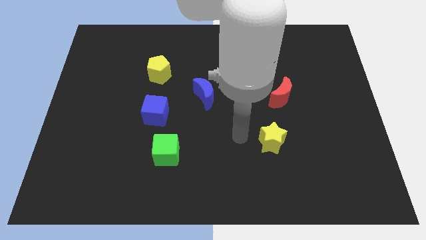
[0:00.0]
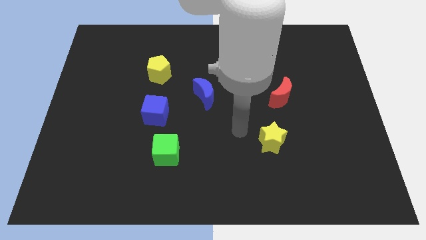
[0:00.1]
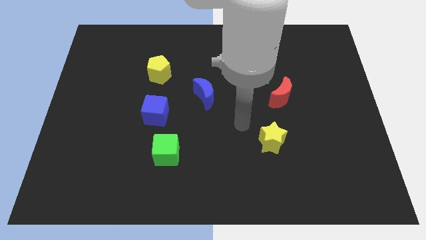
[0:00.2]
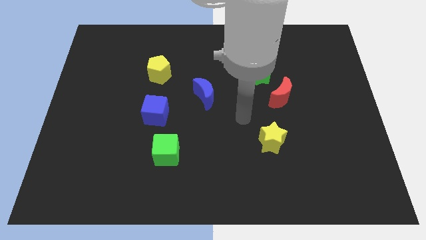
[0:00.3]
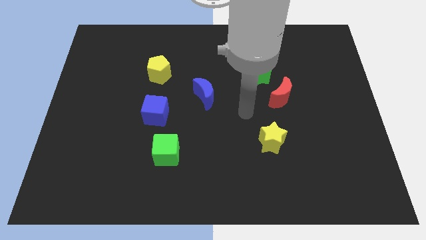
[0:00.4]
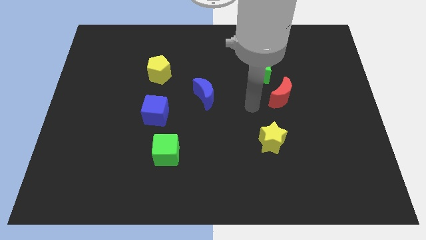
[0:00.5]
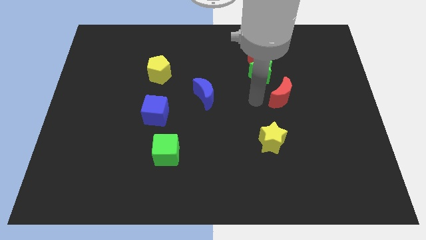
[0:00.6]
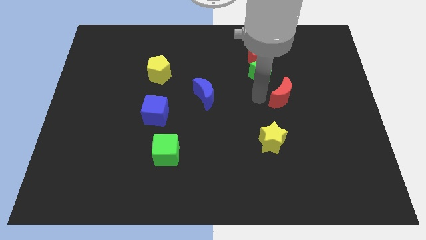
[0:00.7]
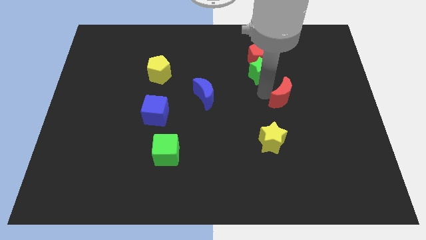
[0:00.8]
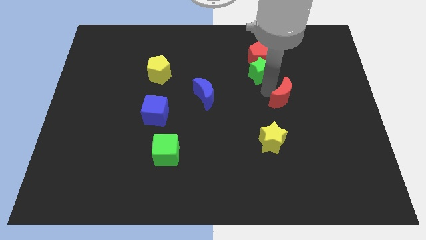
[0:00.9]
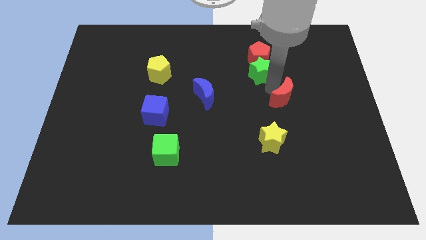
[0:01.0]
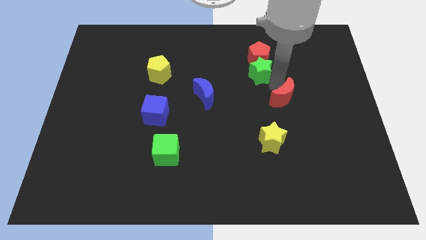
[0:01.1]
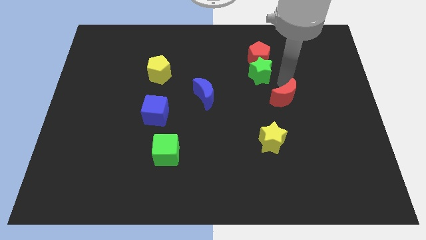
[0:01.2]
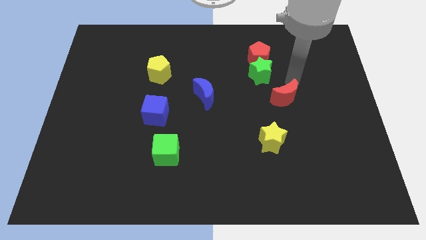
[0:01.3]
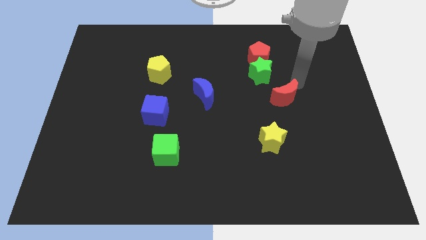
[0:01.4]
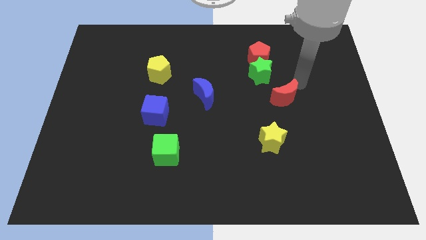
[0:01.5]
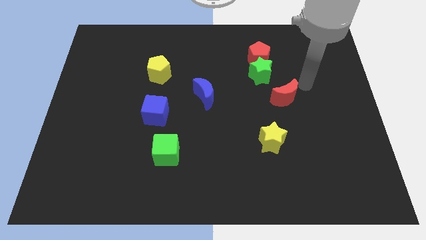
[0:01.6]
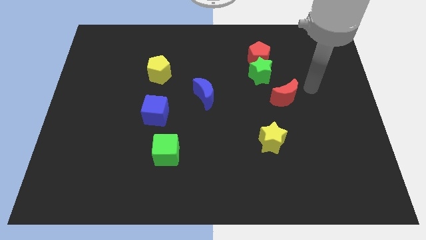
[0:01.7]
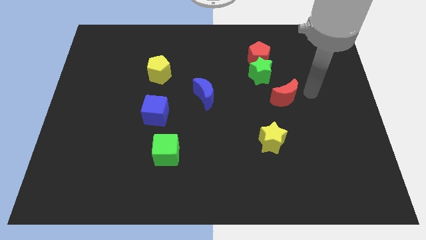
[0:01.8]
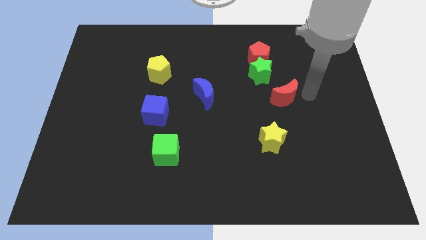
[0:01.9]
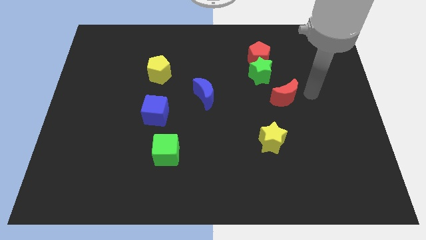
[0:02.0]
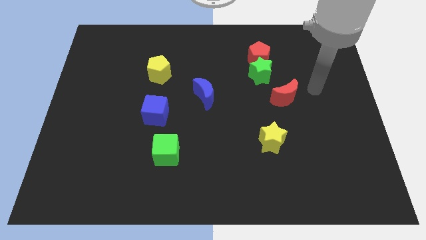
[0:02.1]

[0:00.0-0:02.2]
move your hand to the top right of the red moon

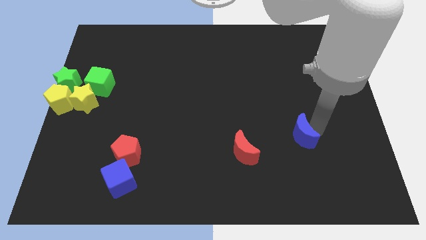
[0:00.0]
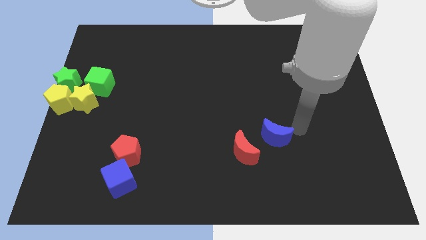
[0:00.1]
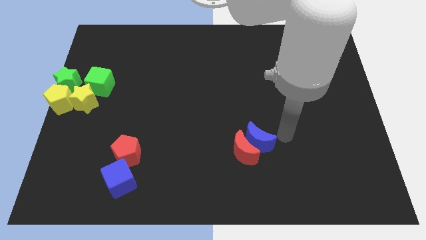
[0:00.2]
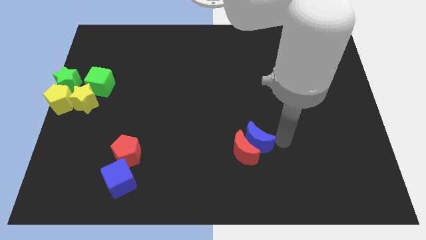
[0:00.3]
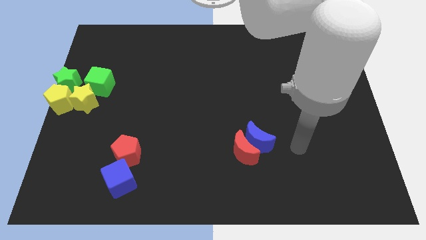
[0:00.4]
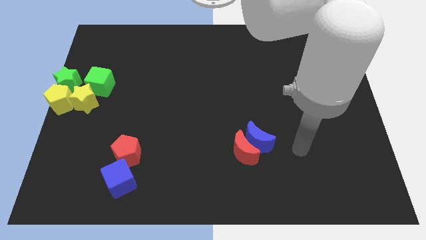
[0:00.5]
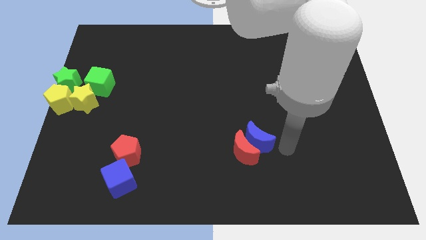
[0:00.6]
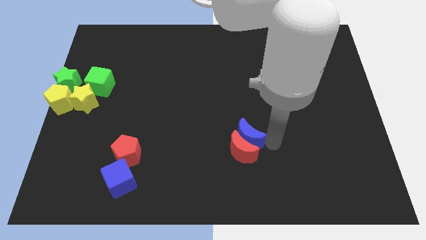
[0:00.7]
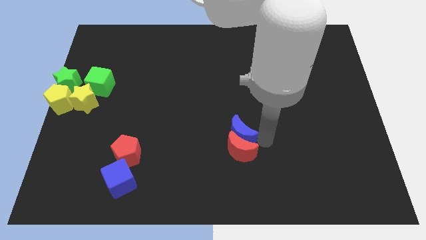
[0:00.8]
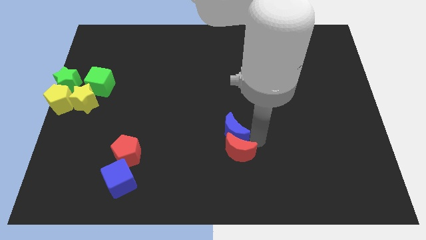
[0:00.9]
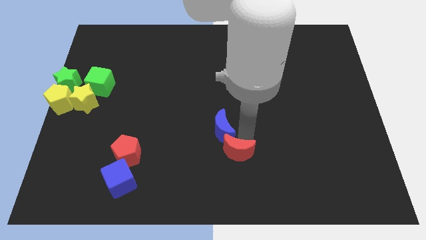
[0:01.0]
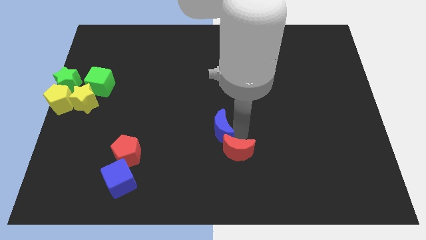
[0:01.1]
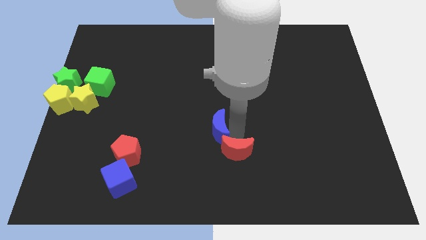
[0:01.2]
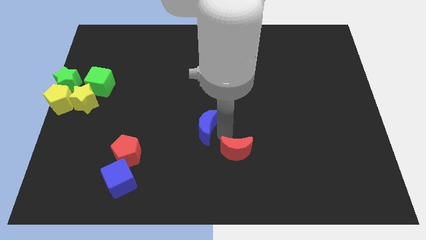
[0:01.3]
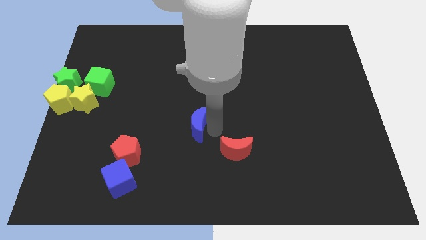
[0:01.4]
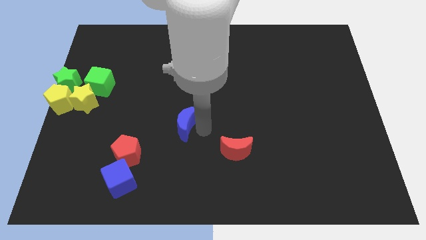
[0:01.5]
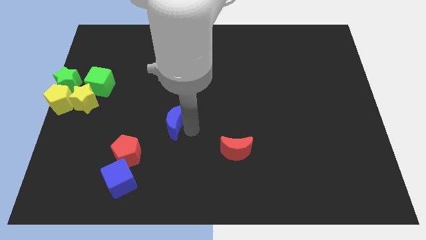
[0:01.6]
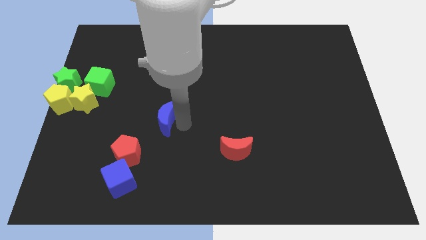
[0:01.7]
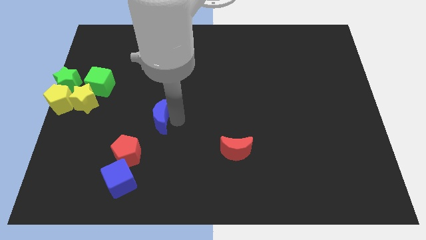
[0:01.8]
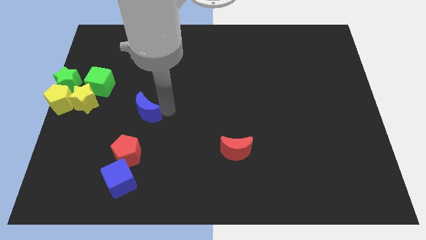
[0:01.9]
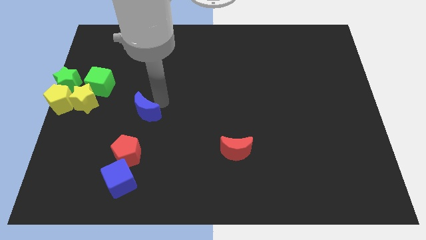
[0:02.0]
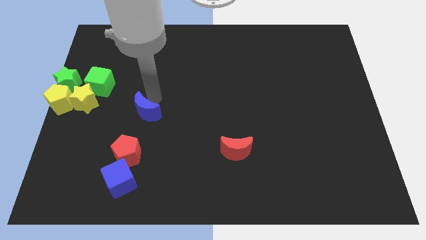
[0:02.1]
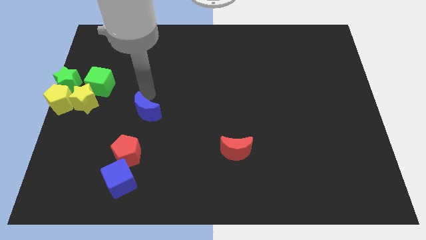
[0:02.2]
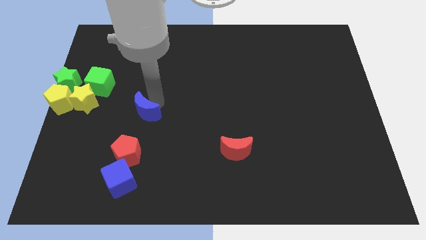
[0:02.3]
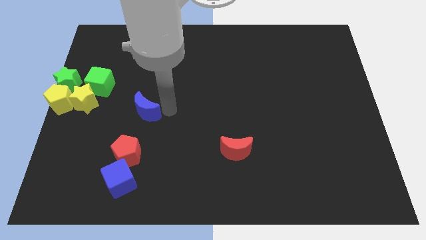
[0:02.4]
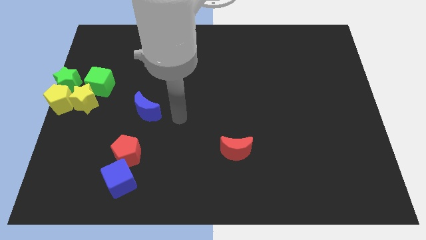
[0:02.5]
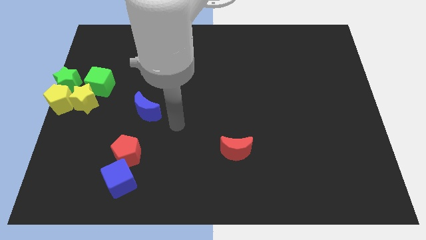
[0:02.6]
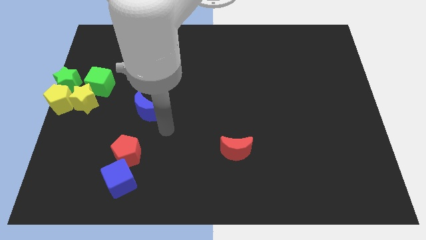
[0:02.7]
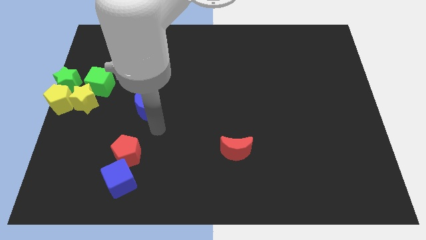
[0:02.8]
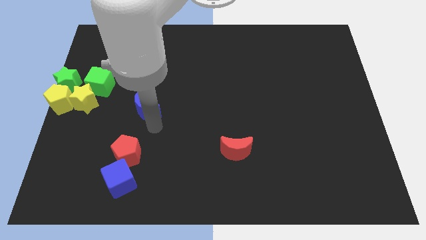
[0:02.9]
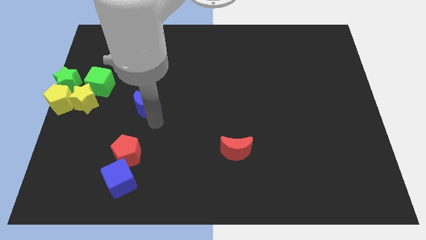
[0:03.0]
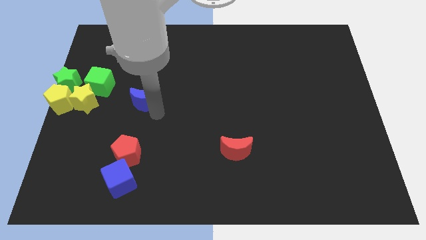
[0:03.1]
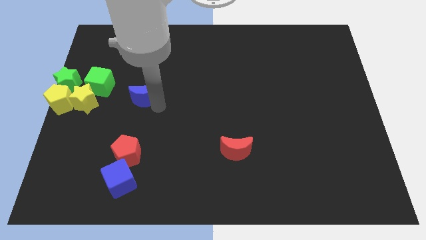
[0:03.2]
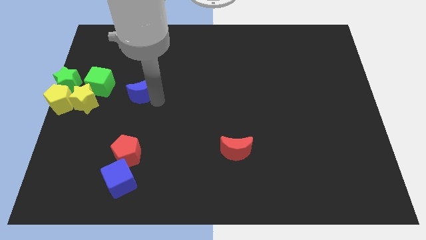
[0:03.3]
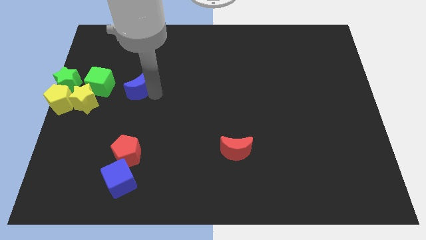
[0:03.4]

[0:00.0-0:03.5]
move the blue crescent to the right of the green cube

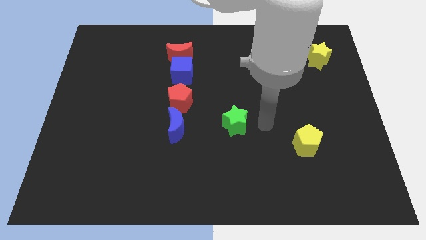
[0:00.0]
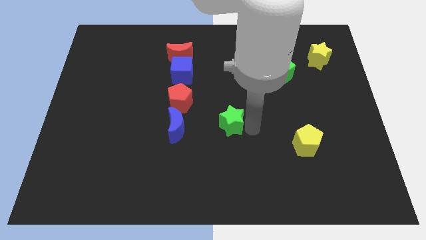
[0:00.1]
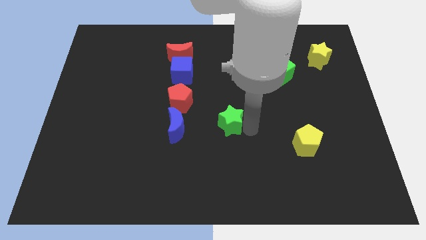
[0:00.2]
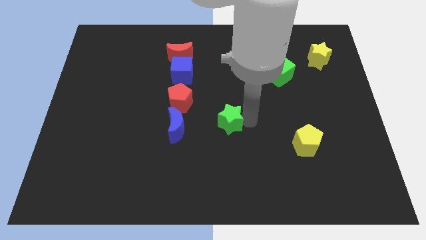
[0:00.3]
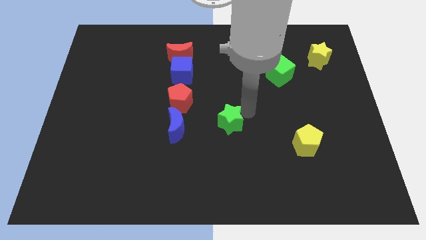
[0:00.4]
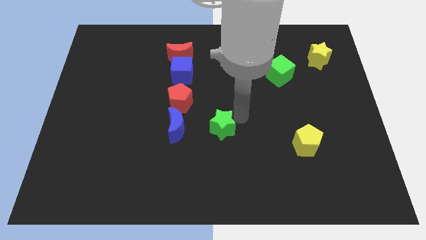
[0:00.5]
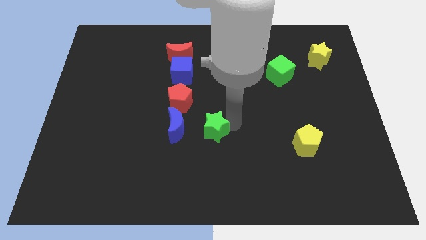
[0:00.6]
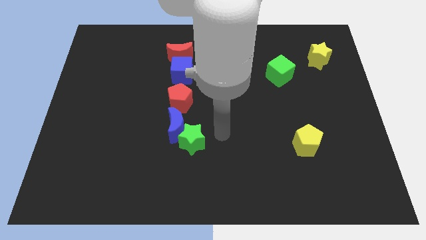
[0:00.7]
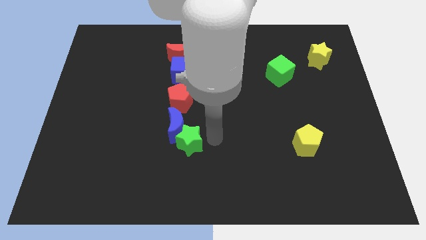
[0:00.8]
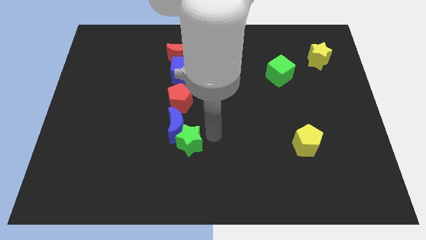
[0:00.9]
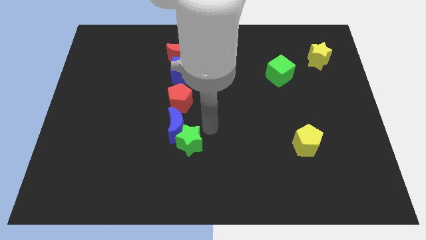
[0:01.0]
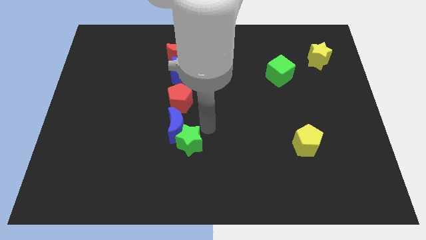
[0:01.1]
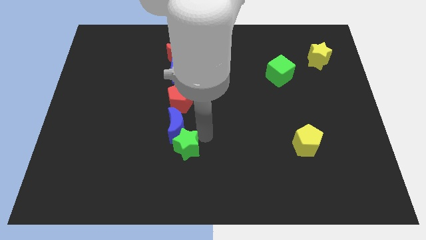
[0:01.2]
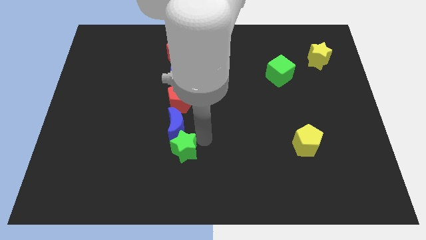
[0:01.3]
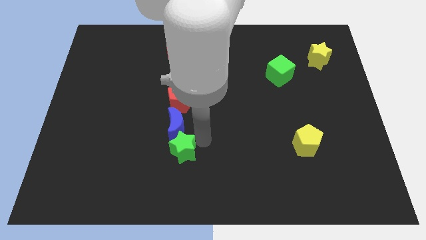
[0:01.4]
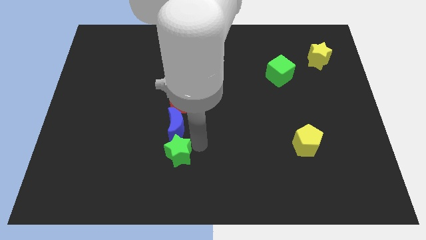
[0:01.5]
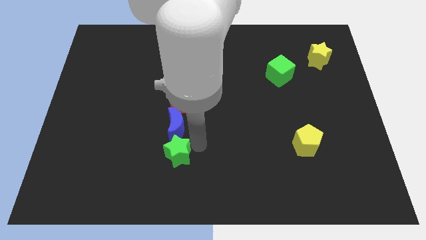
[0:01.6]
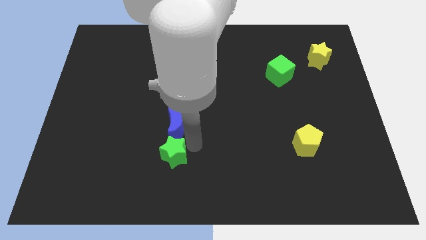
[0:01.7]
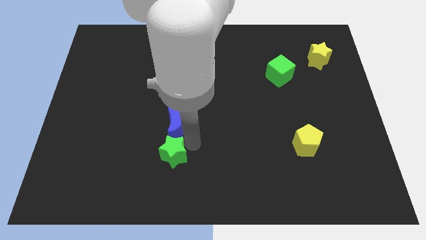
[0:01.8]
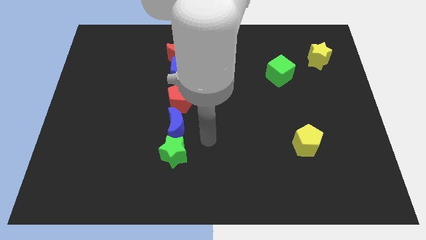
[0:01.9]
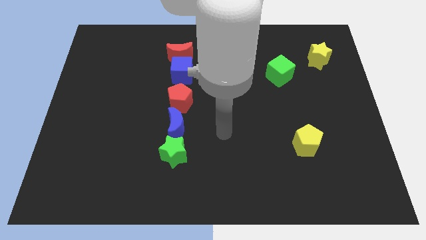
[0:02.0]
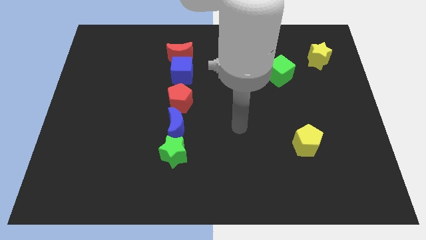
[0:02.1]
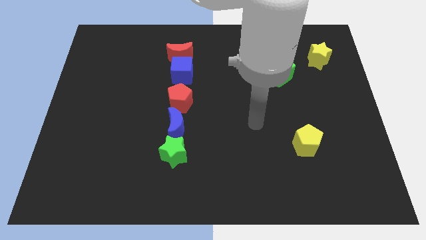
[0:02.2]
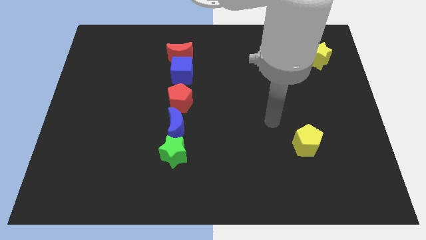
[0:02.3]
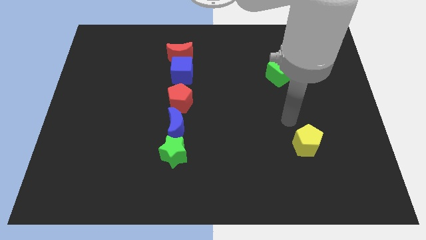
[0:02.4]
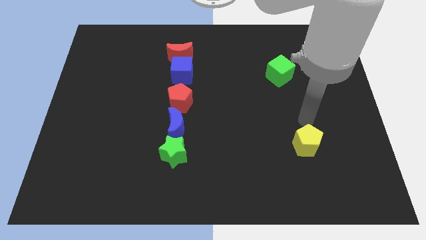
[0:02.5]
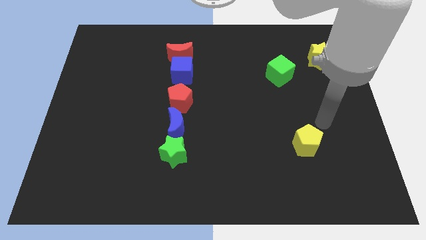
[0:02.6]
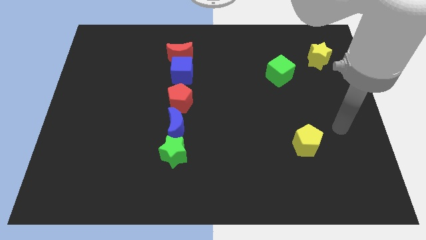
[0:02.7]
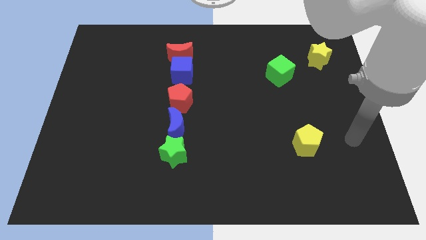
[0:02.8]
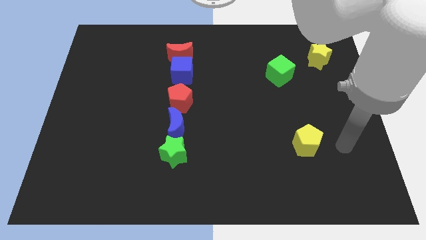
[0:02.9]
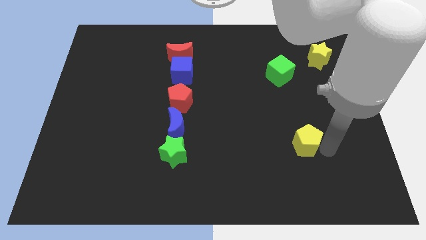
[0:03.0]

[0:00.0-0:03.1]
push the green star to the bottom of the blue crescent

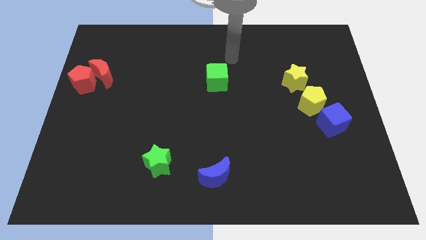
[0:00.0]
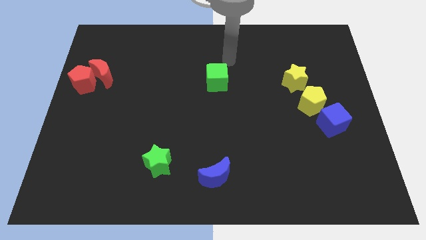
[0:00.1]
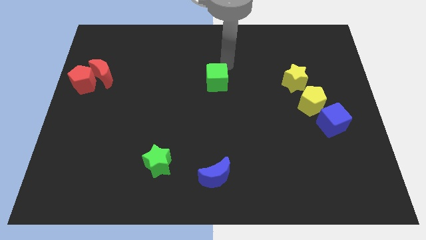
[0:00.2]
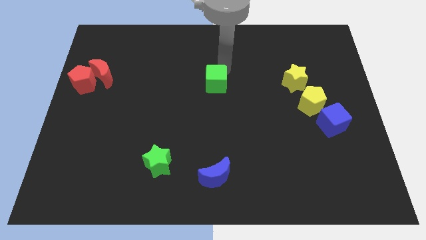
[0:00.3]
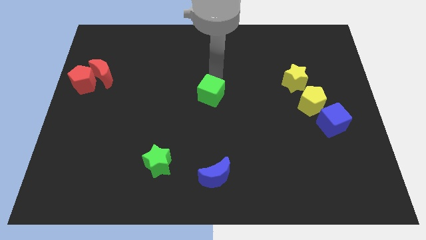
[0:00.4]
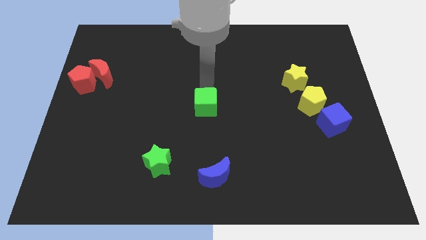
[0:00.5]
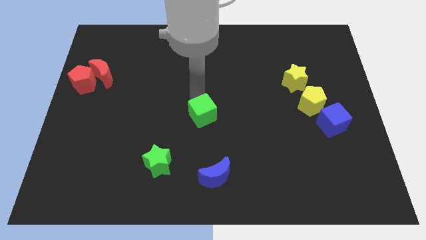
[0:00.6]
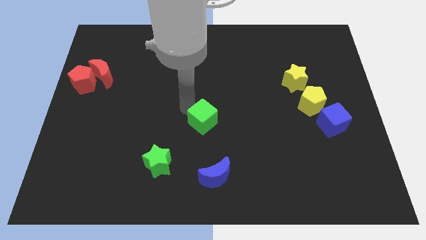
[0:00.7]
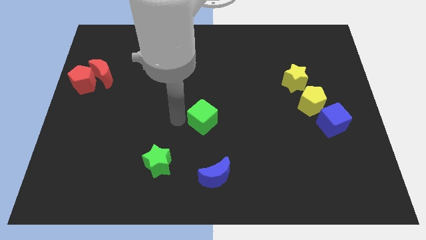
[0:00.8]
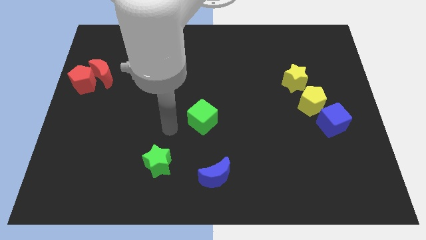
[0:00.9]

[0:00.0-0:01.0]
put the green cube above the blue crescent
